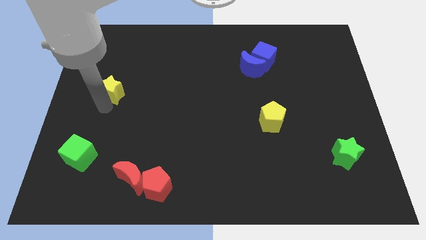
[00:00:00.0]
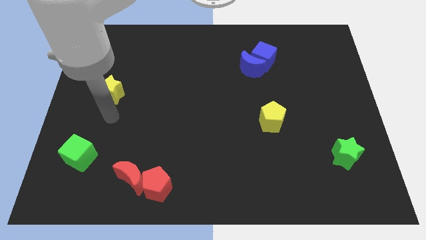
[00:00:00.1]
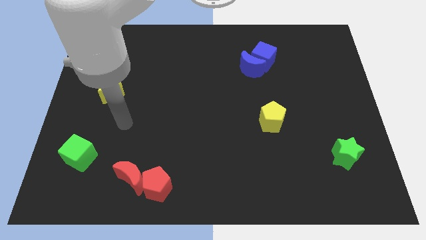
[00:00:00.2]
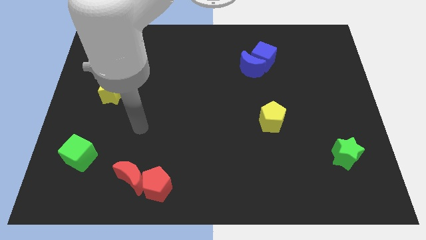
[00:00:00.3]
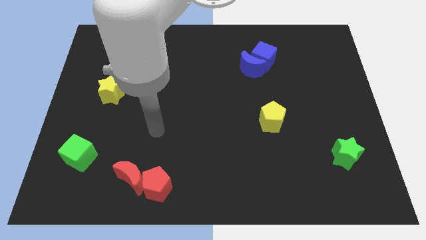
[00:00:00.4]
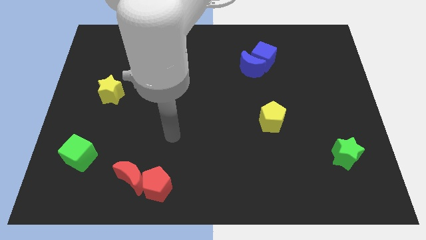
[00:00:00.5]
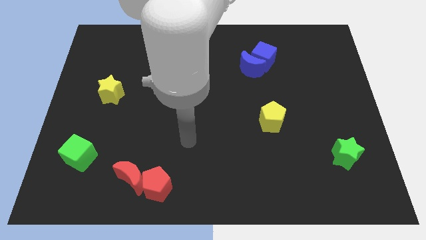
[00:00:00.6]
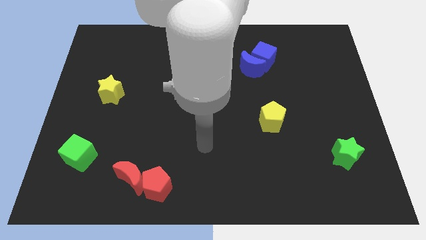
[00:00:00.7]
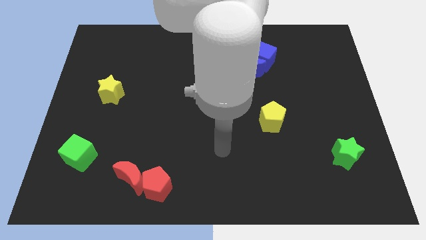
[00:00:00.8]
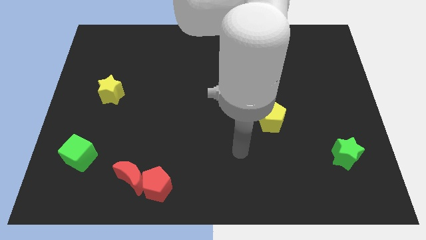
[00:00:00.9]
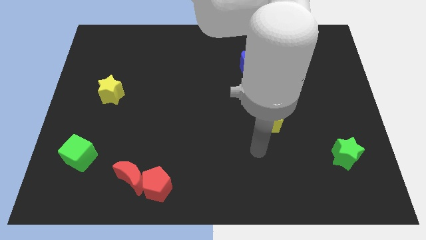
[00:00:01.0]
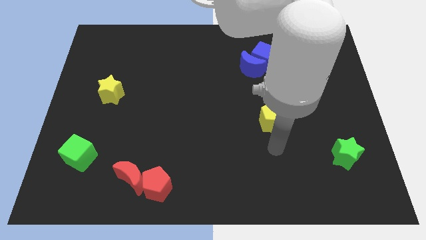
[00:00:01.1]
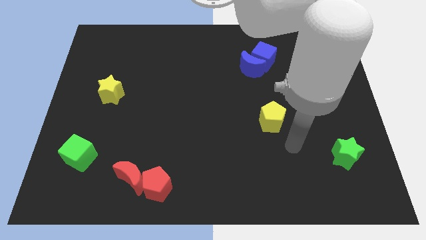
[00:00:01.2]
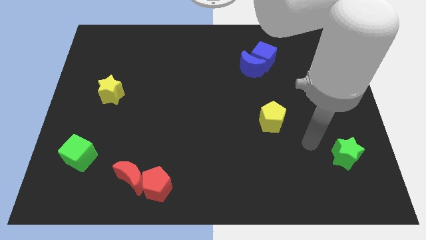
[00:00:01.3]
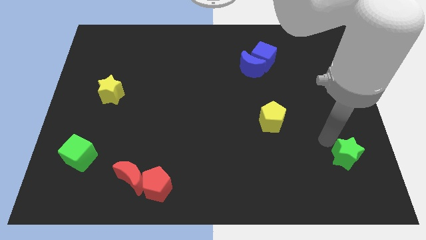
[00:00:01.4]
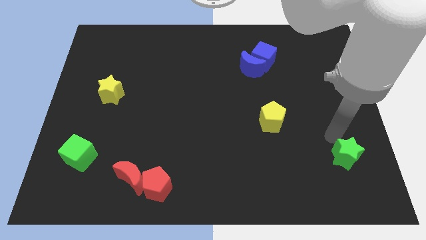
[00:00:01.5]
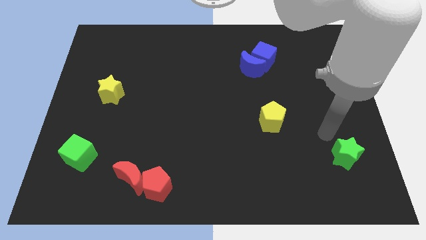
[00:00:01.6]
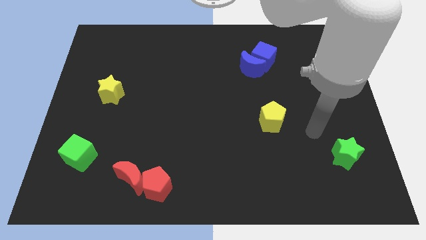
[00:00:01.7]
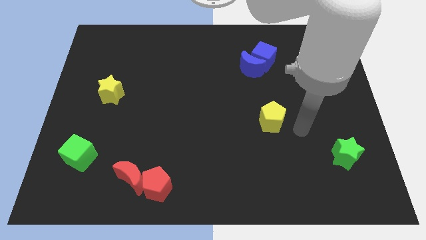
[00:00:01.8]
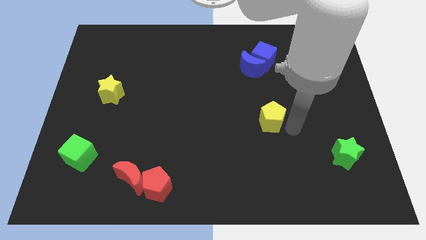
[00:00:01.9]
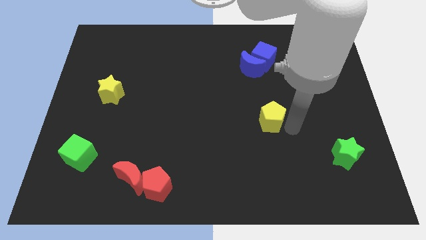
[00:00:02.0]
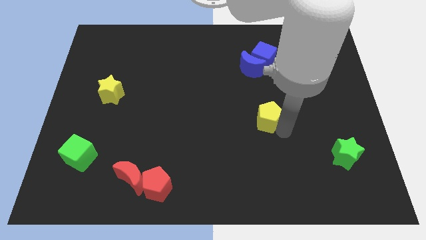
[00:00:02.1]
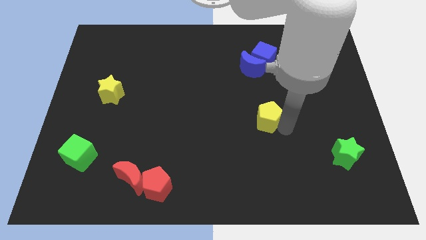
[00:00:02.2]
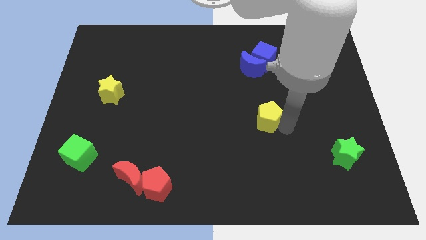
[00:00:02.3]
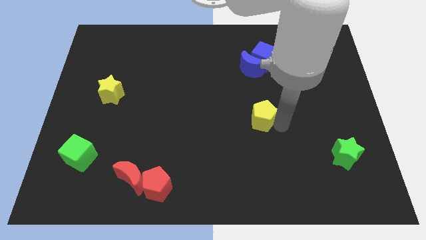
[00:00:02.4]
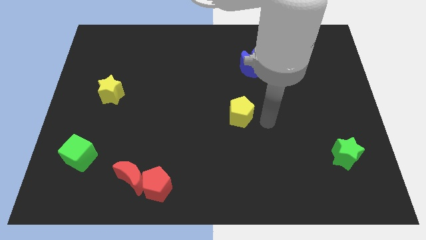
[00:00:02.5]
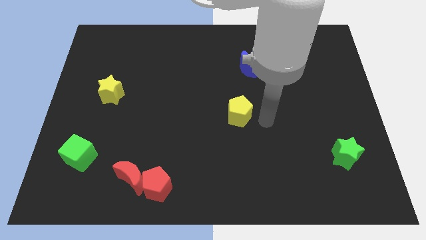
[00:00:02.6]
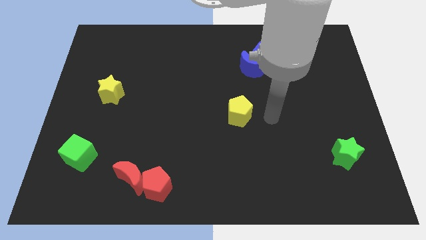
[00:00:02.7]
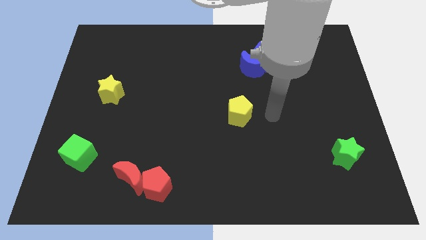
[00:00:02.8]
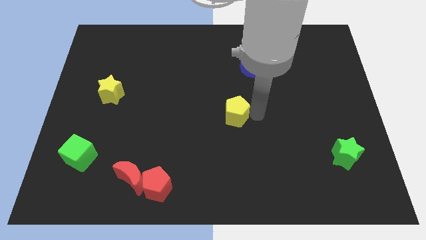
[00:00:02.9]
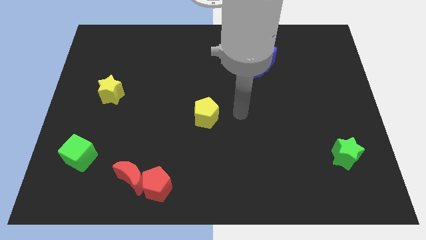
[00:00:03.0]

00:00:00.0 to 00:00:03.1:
move the yellow pentagon slightly to the left

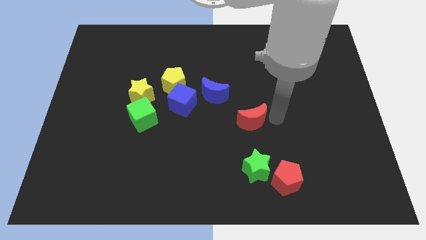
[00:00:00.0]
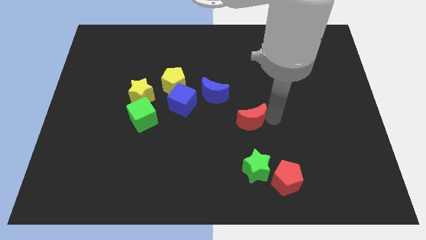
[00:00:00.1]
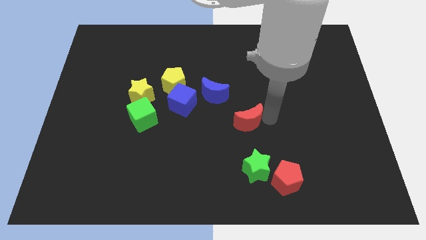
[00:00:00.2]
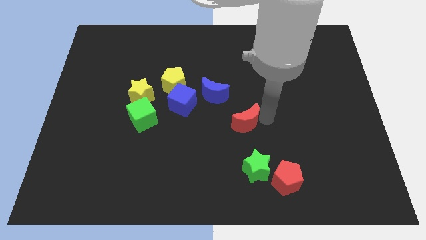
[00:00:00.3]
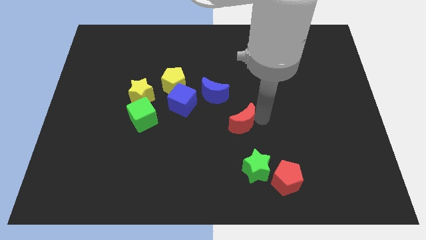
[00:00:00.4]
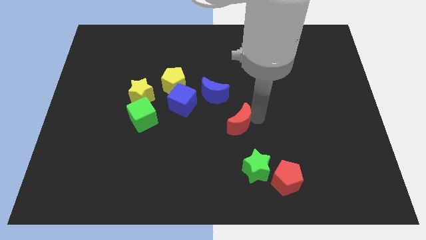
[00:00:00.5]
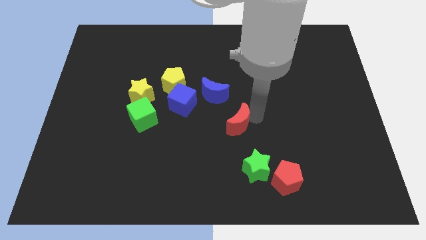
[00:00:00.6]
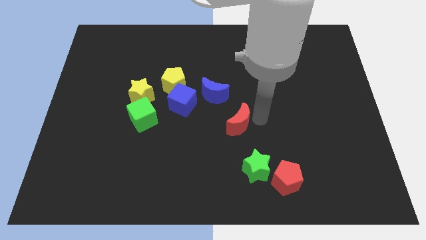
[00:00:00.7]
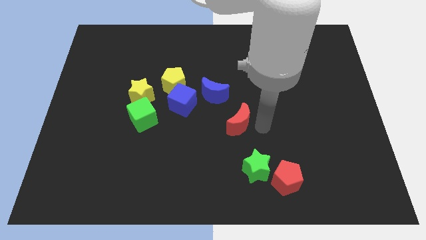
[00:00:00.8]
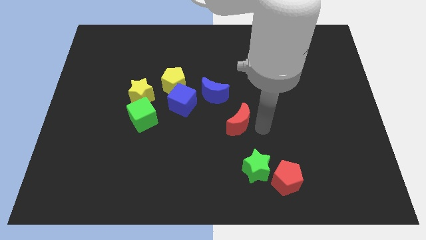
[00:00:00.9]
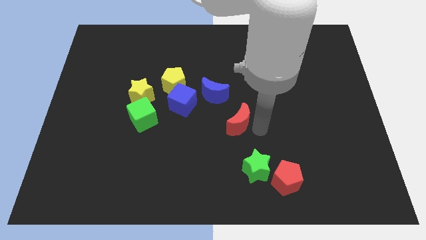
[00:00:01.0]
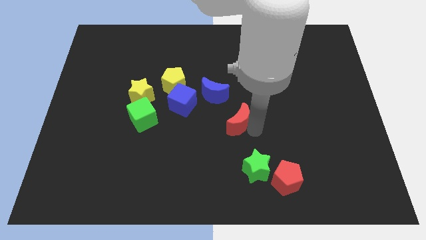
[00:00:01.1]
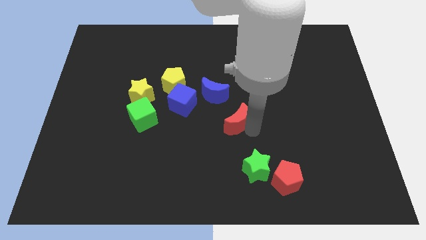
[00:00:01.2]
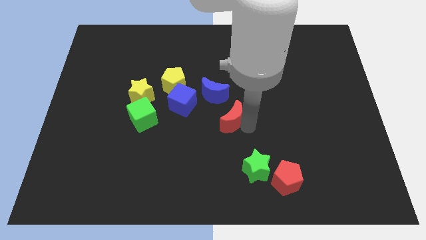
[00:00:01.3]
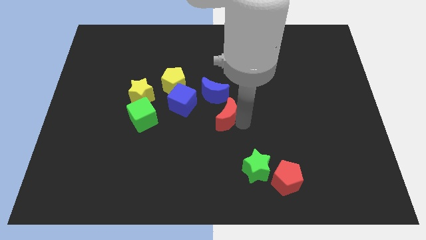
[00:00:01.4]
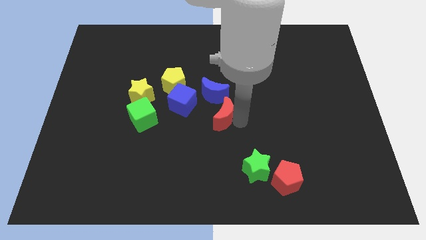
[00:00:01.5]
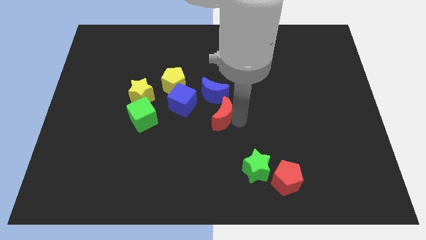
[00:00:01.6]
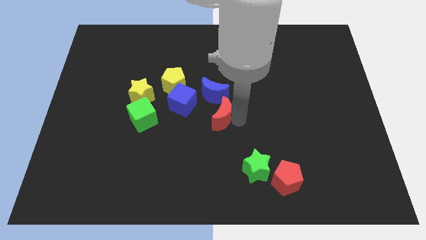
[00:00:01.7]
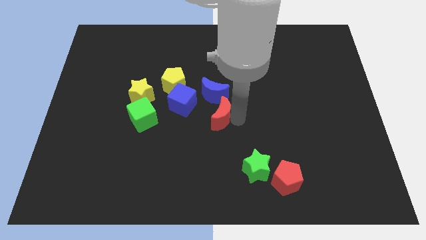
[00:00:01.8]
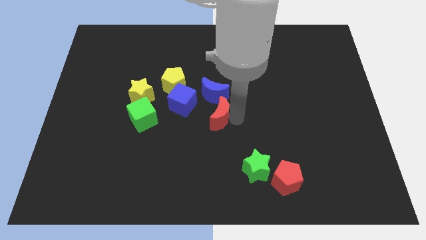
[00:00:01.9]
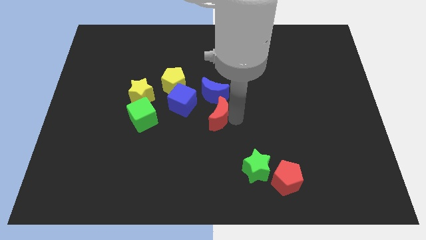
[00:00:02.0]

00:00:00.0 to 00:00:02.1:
place the red moon below the blue moon

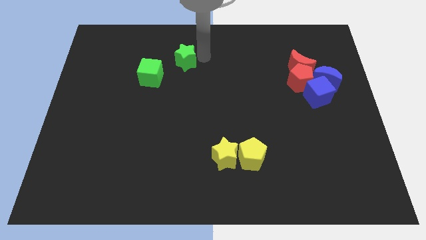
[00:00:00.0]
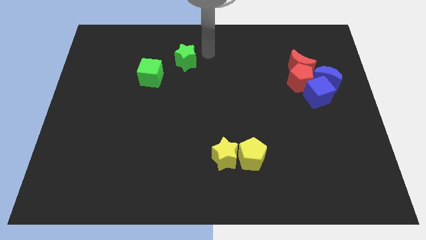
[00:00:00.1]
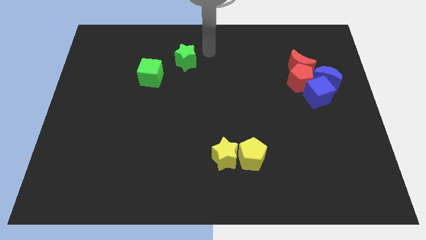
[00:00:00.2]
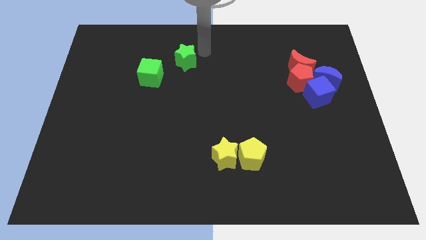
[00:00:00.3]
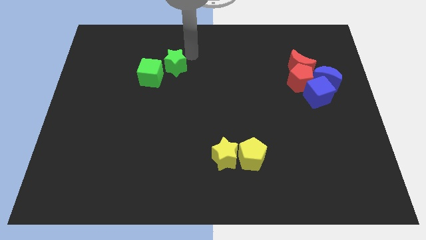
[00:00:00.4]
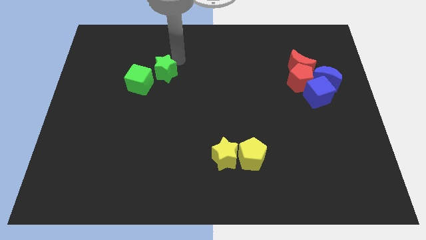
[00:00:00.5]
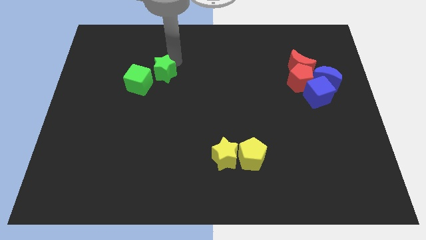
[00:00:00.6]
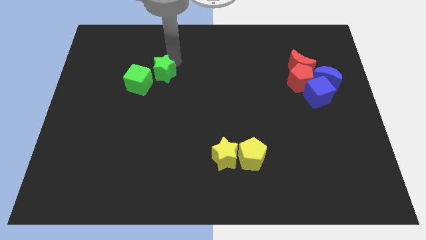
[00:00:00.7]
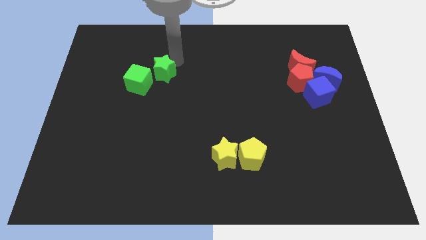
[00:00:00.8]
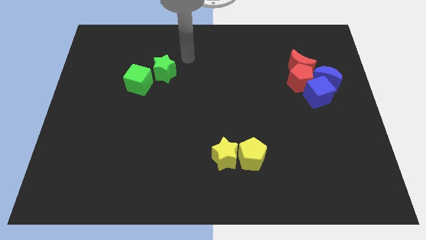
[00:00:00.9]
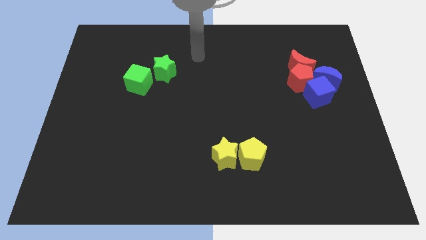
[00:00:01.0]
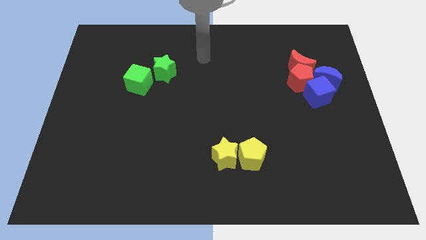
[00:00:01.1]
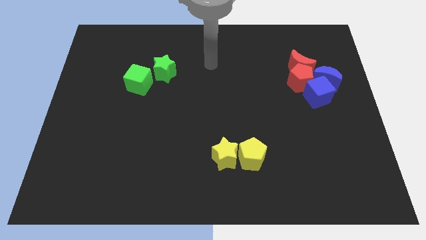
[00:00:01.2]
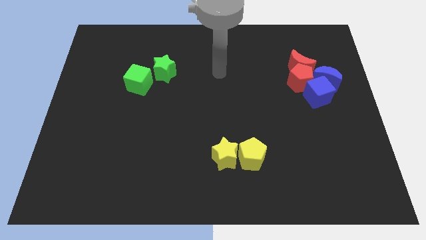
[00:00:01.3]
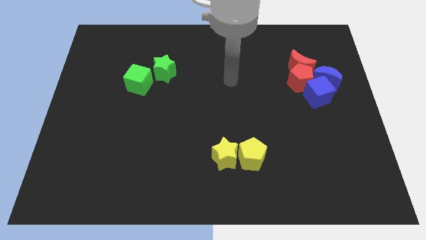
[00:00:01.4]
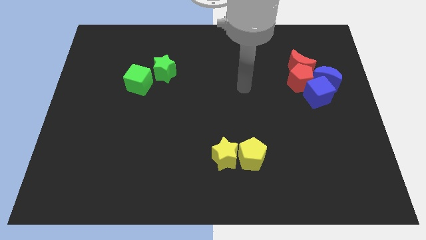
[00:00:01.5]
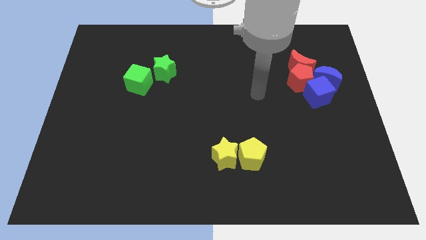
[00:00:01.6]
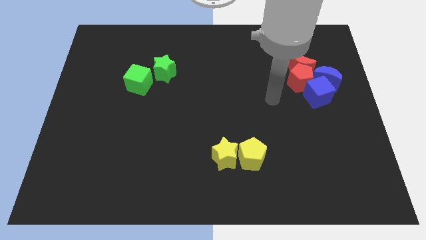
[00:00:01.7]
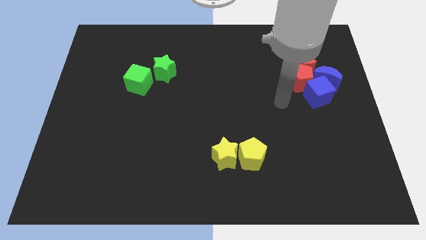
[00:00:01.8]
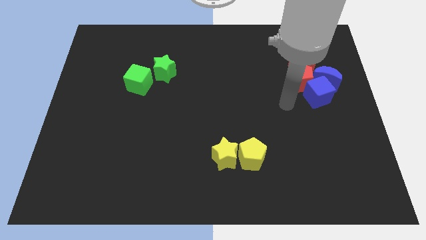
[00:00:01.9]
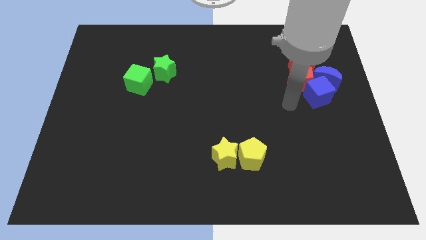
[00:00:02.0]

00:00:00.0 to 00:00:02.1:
push green star into green cube

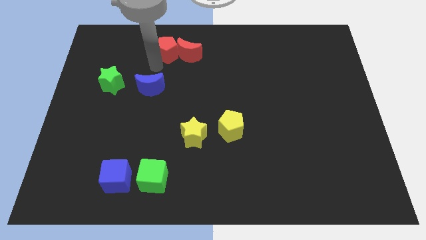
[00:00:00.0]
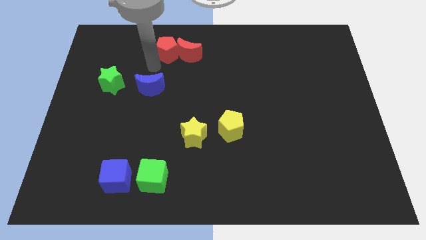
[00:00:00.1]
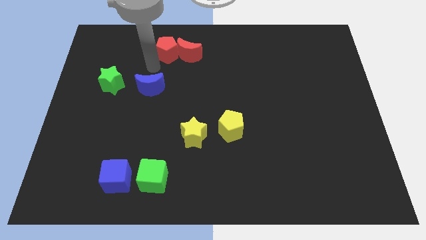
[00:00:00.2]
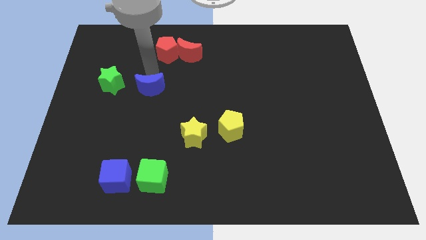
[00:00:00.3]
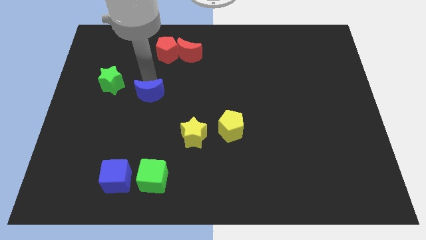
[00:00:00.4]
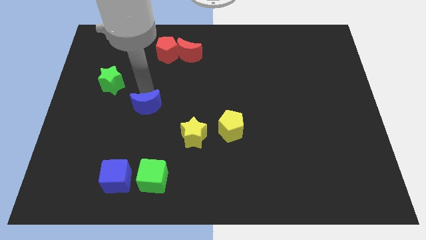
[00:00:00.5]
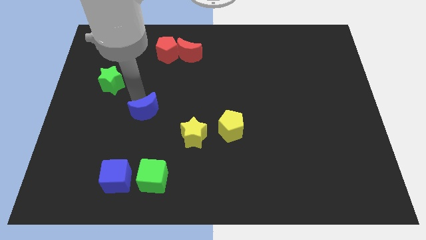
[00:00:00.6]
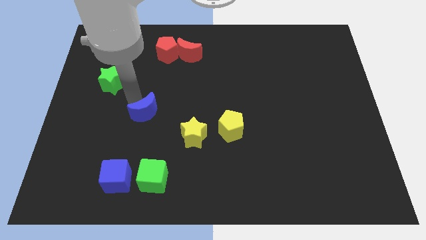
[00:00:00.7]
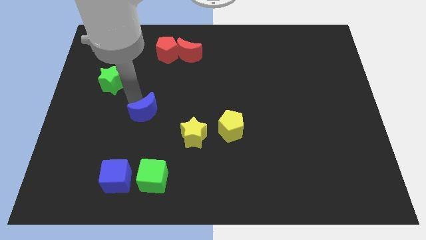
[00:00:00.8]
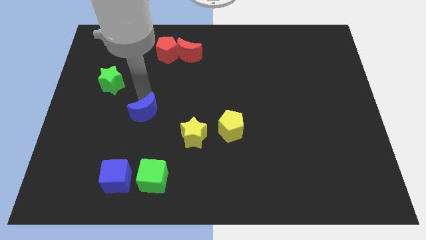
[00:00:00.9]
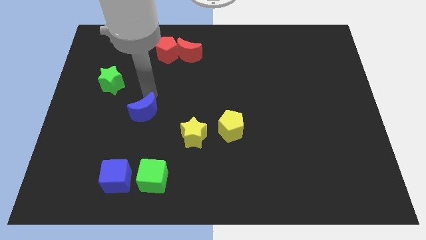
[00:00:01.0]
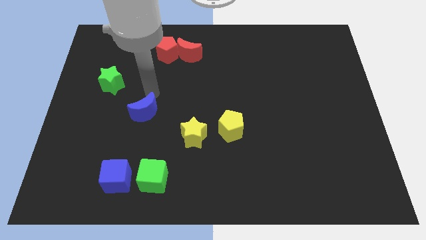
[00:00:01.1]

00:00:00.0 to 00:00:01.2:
place the blue moon below the green star

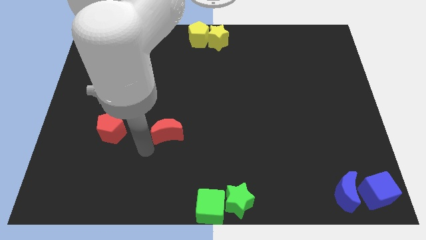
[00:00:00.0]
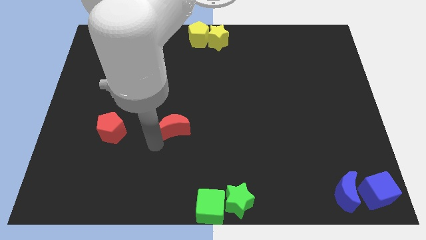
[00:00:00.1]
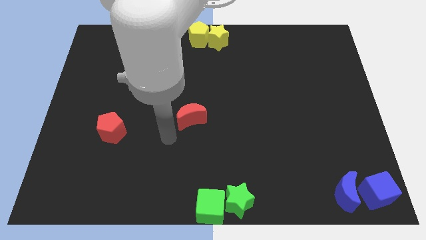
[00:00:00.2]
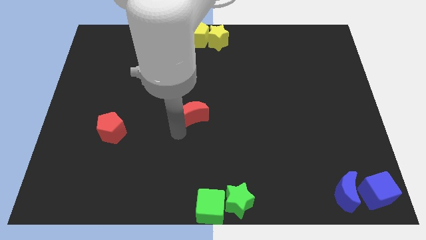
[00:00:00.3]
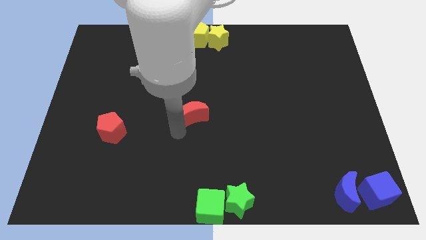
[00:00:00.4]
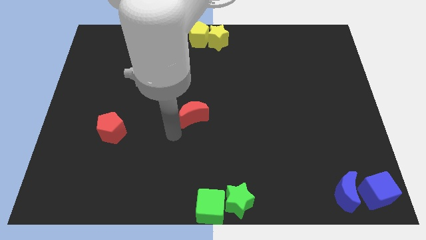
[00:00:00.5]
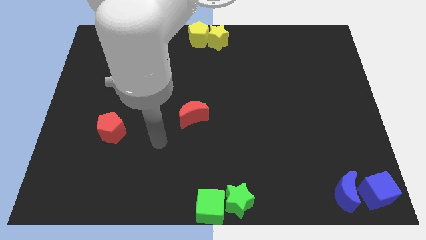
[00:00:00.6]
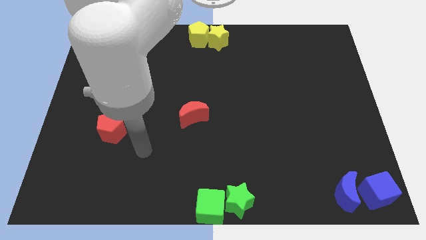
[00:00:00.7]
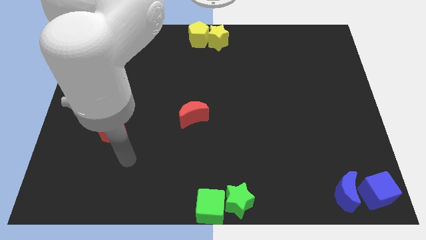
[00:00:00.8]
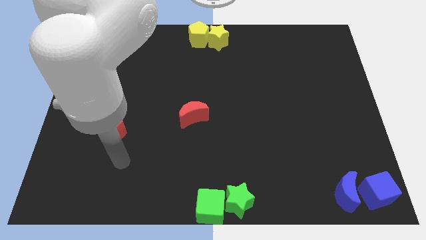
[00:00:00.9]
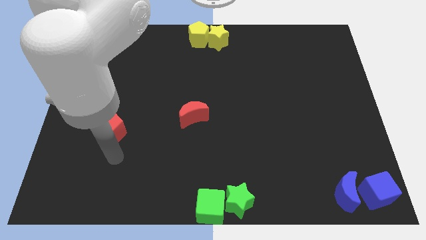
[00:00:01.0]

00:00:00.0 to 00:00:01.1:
move red crescent towards the center
